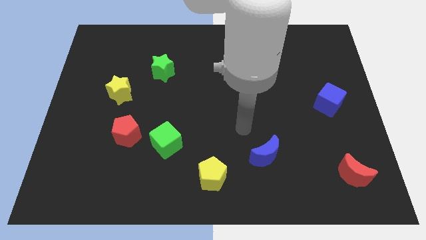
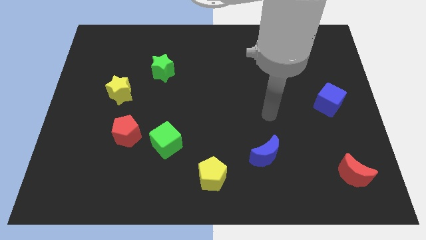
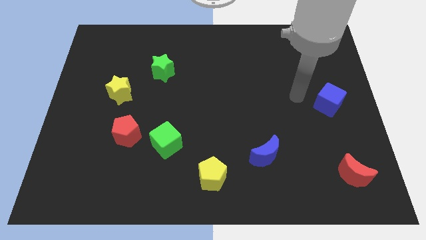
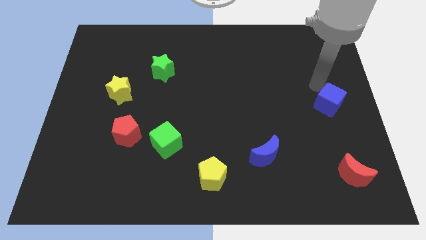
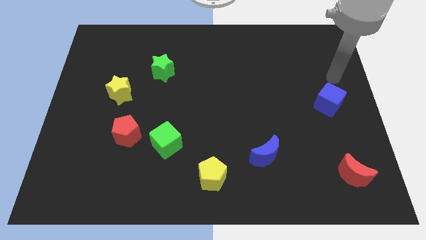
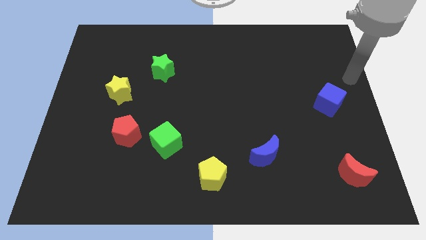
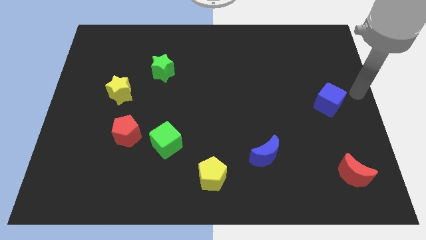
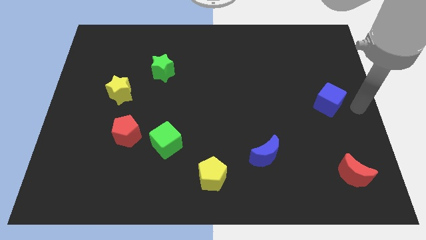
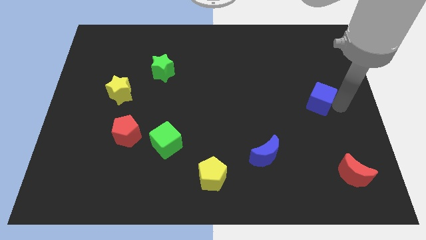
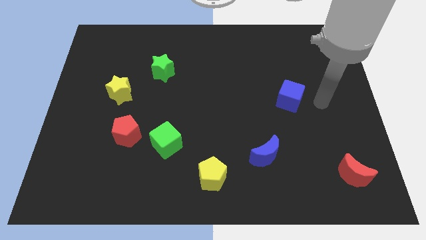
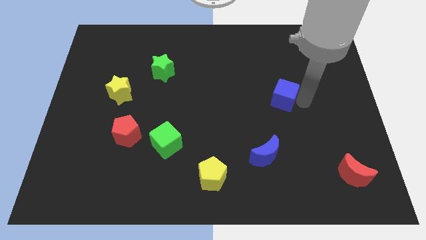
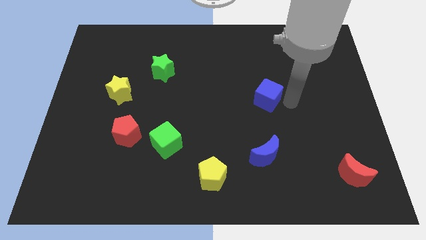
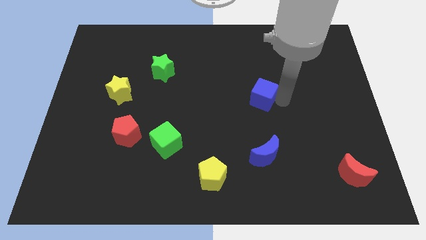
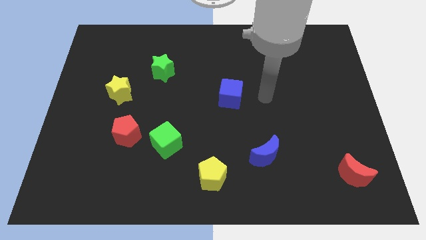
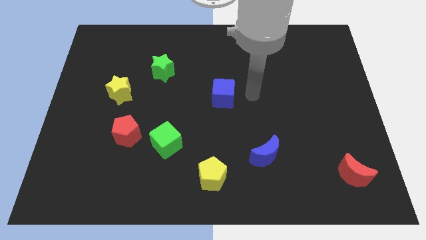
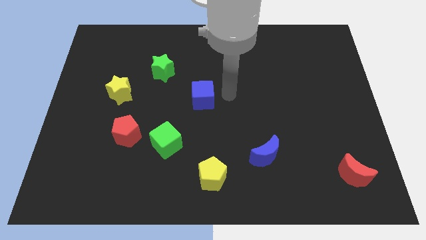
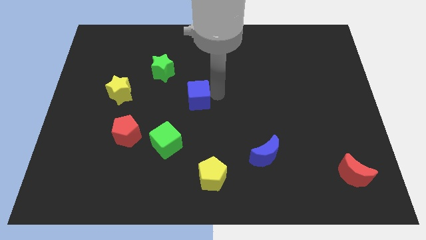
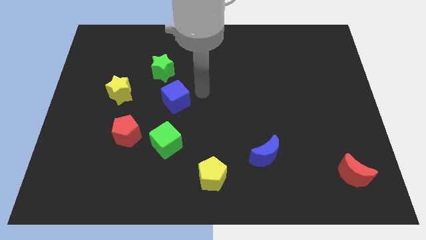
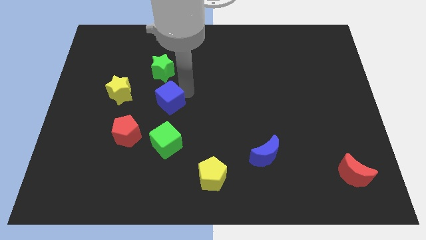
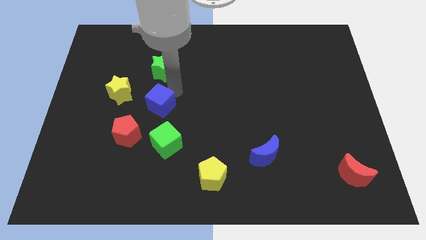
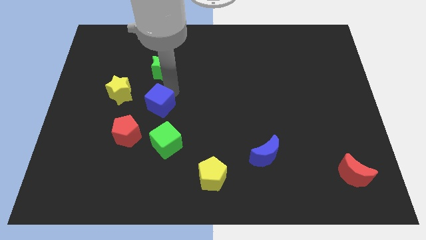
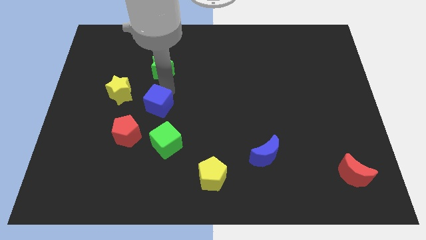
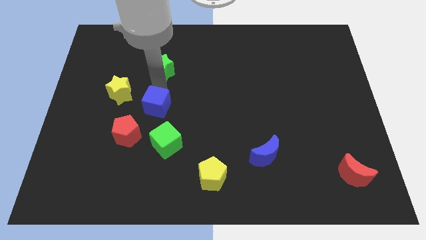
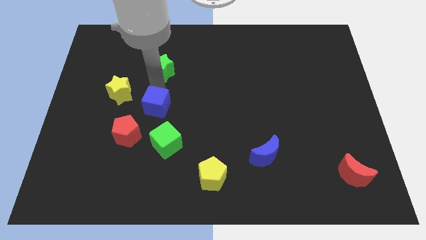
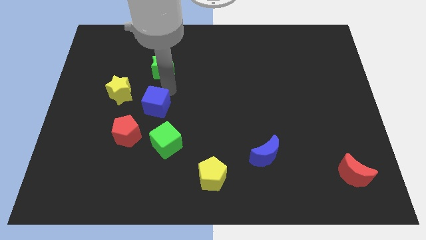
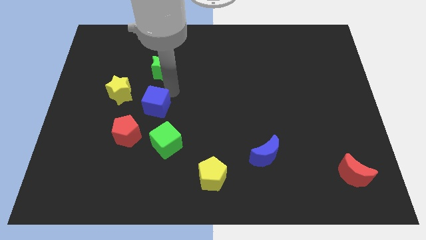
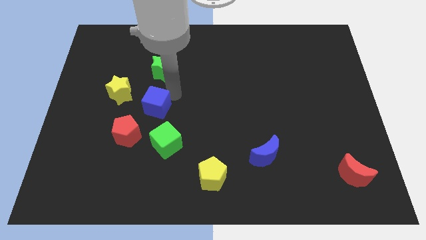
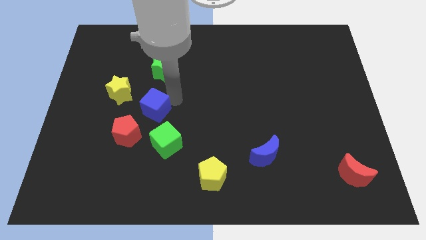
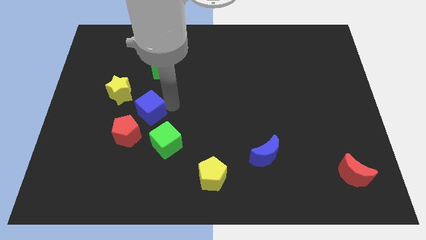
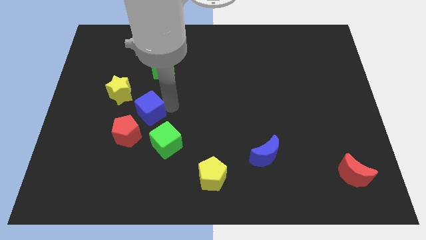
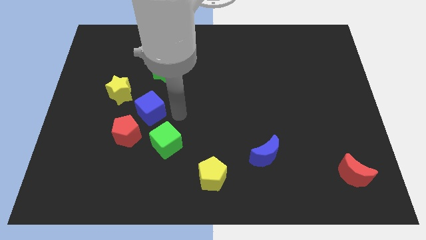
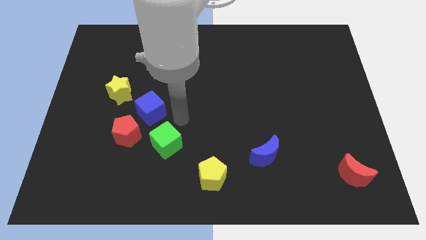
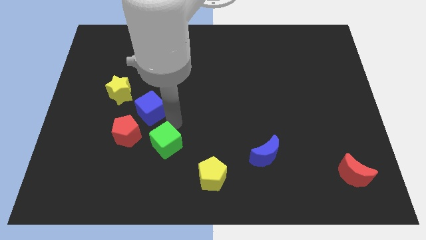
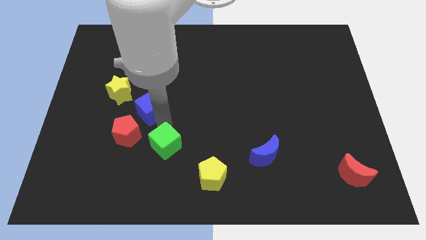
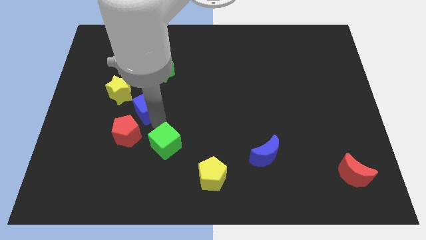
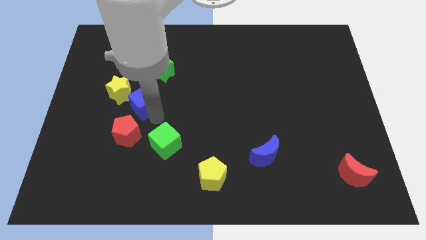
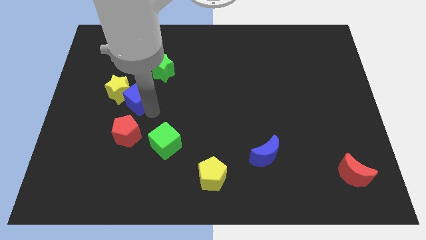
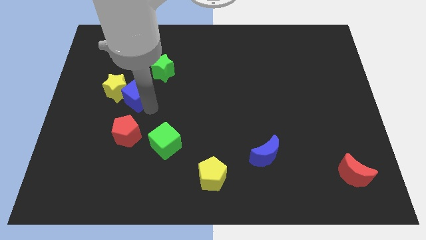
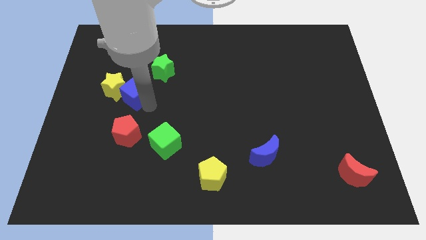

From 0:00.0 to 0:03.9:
slide the blue cube towards the yellow star

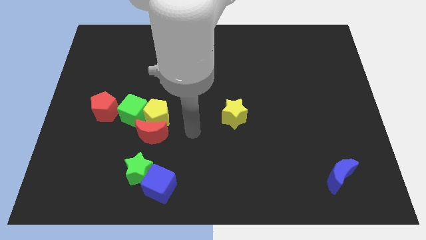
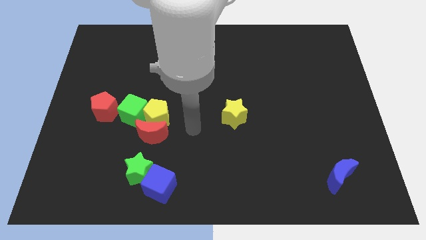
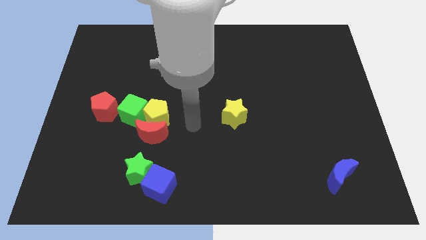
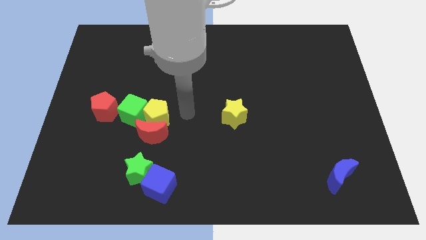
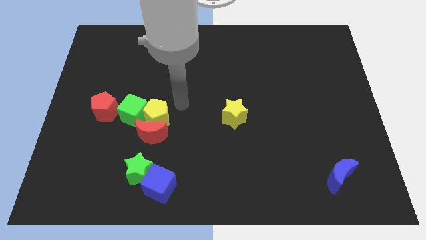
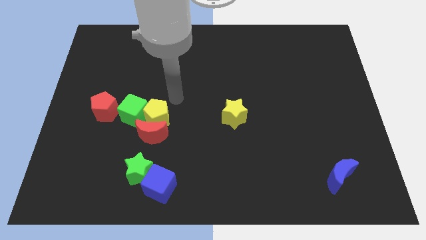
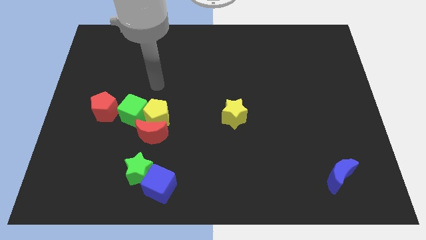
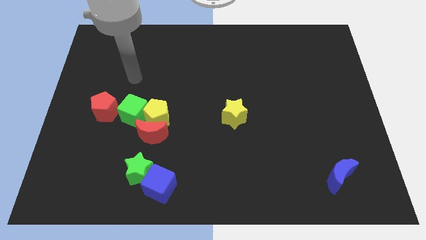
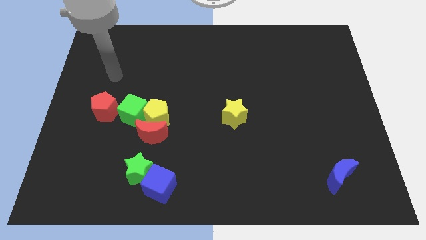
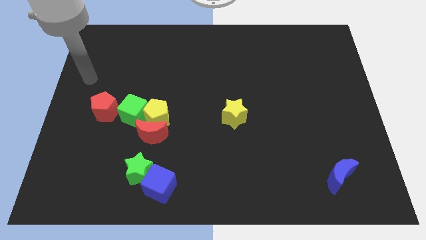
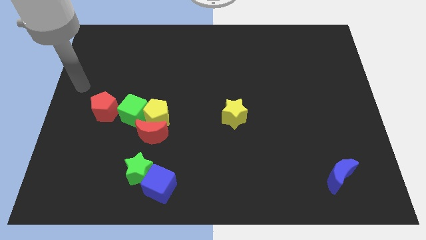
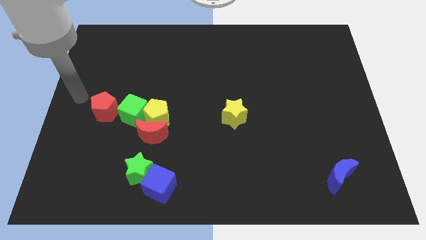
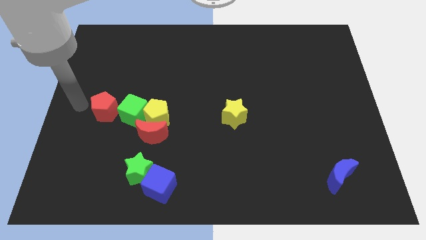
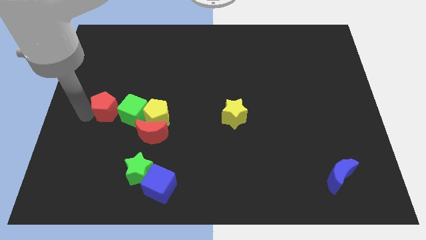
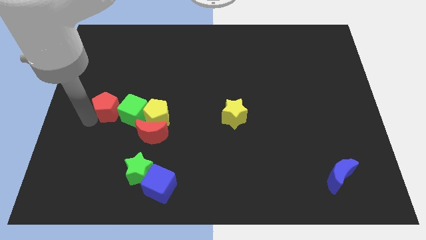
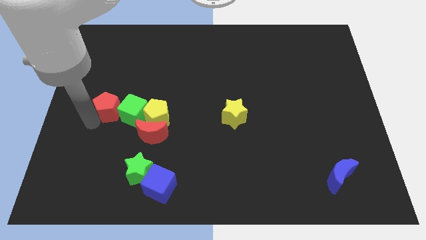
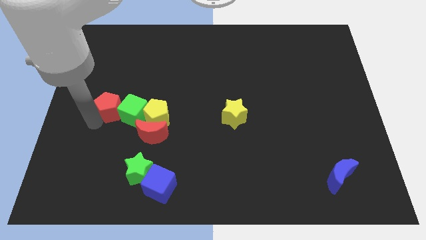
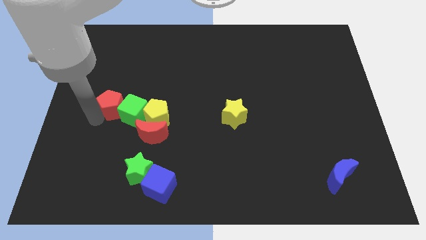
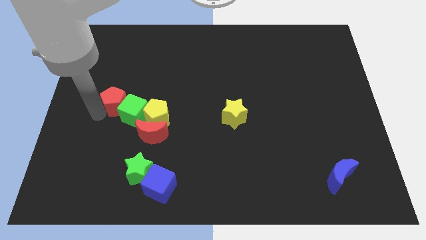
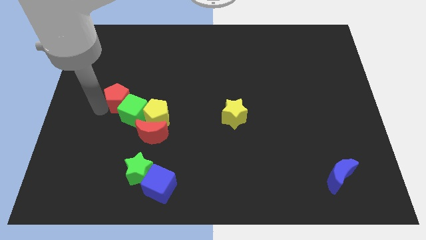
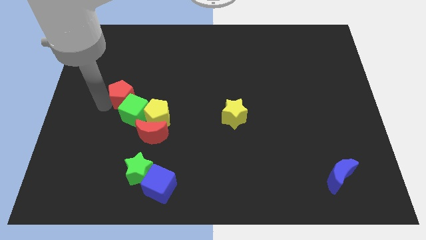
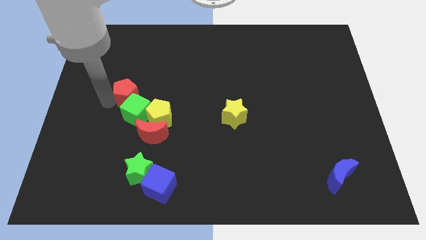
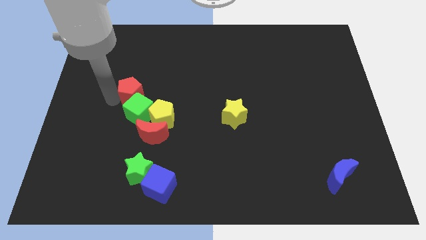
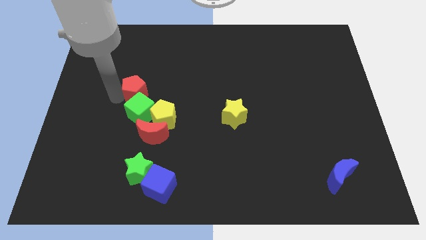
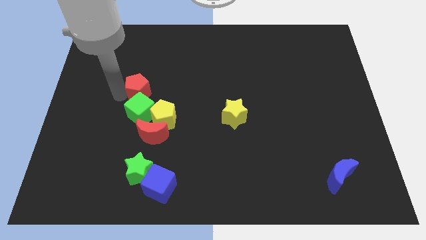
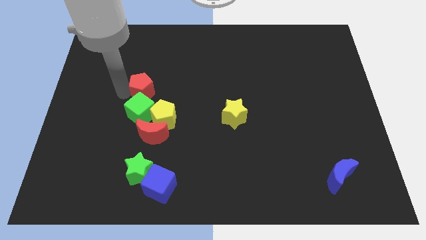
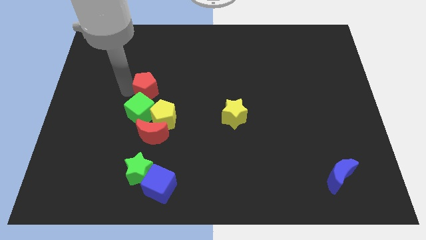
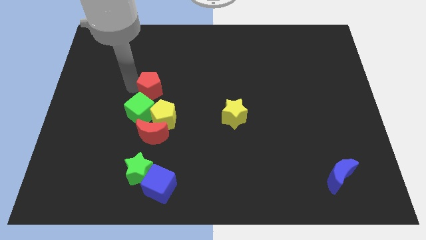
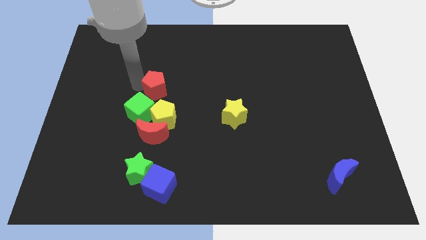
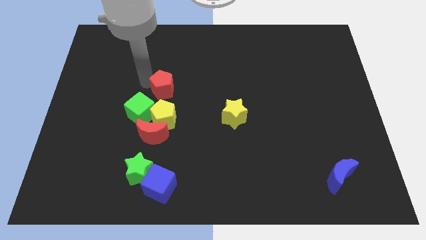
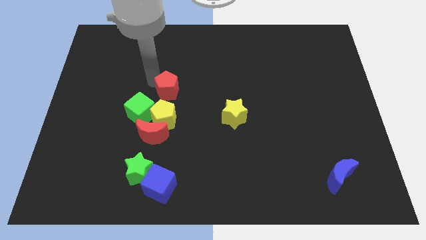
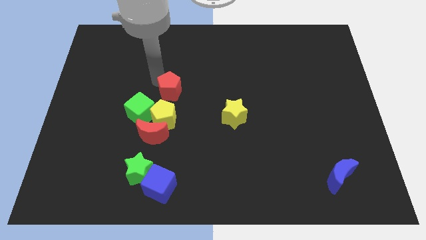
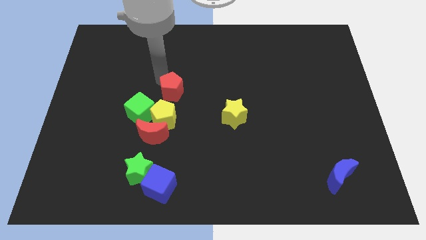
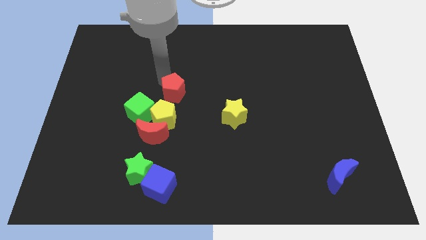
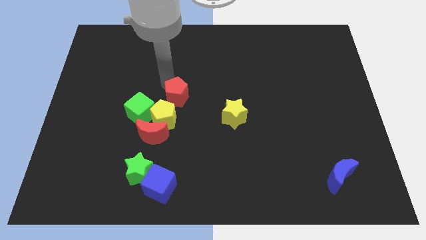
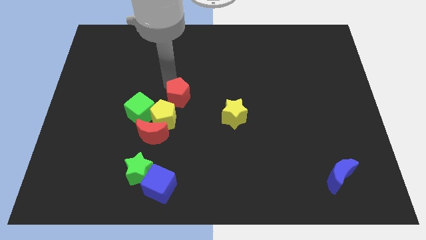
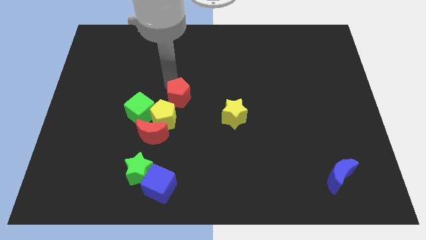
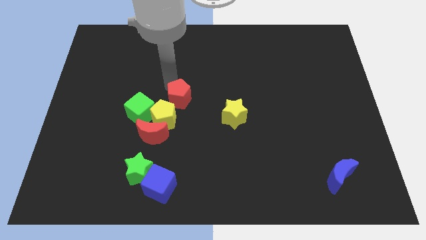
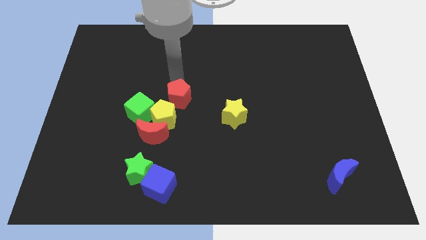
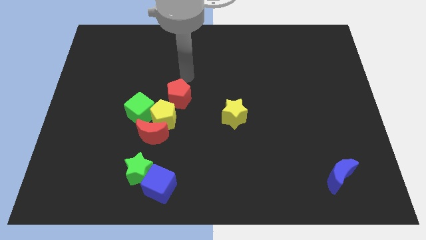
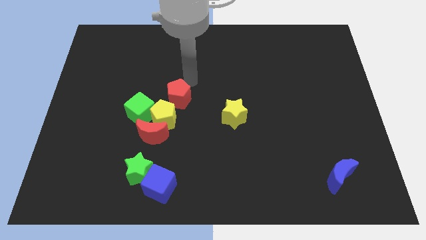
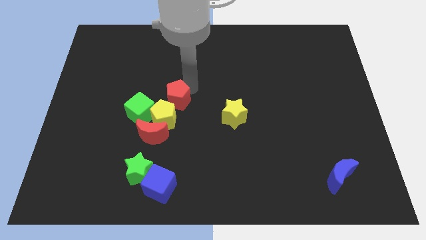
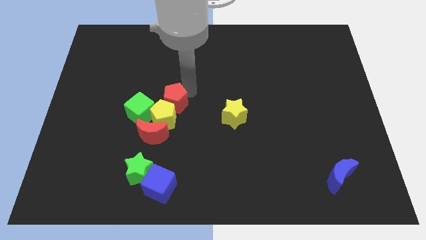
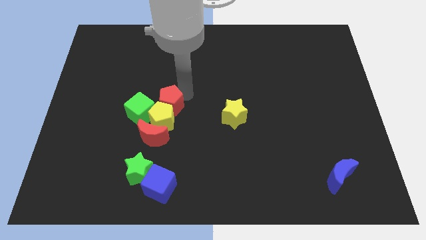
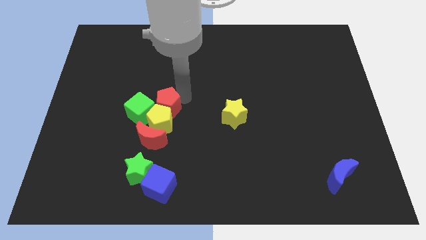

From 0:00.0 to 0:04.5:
push the red pentagon towards the yellow pentagon
